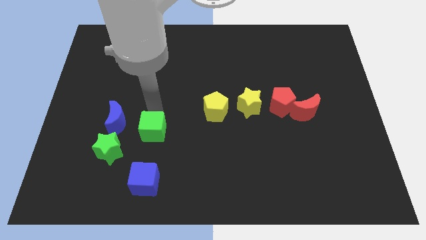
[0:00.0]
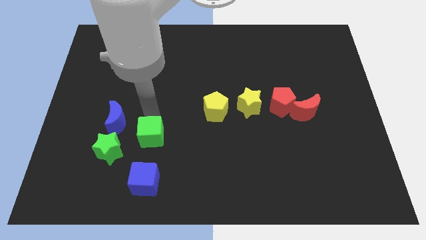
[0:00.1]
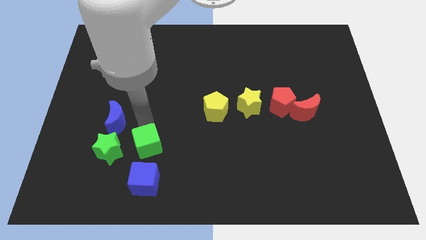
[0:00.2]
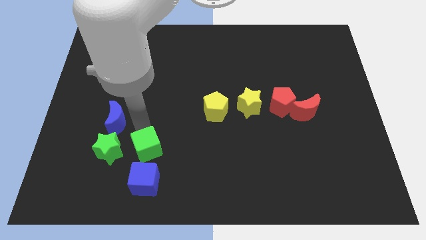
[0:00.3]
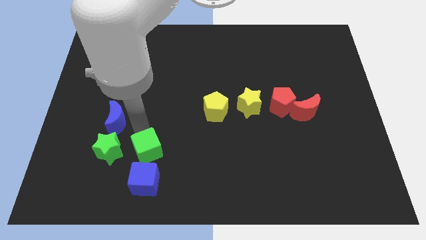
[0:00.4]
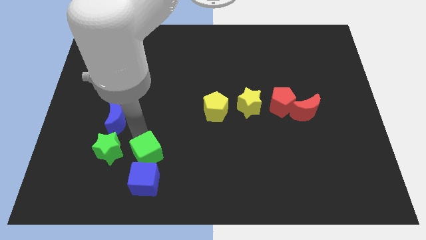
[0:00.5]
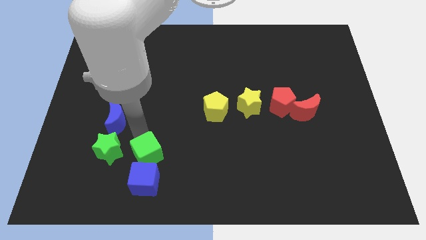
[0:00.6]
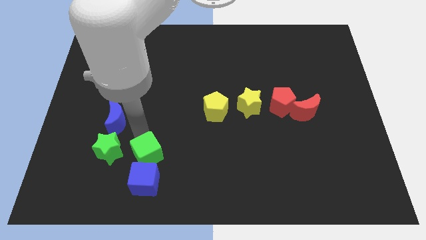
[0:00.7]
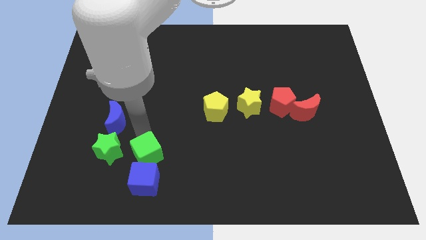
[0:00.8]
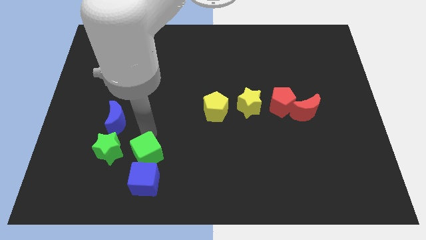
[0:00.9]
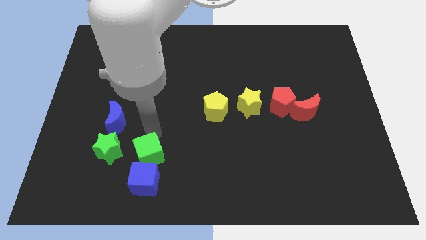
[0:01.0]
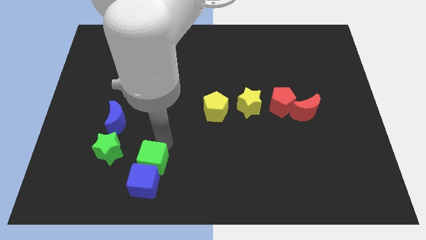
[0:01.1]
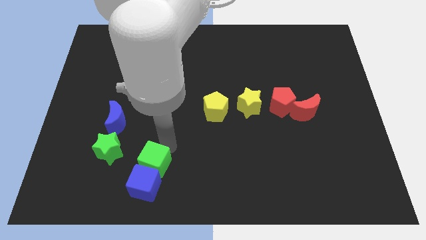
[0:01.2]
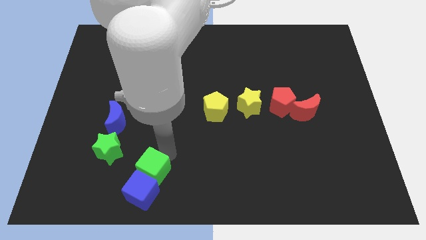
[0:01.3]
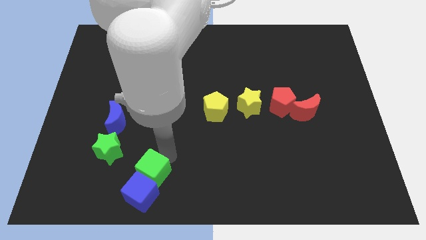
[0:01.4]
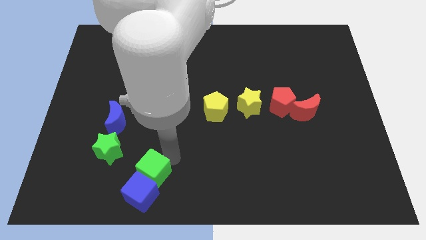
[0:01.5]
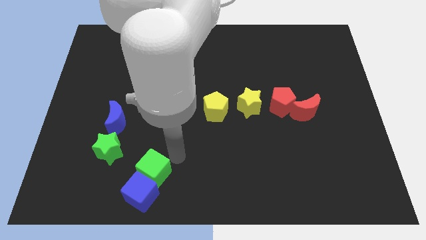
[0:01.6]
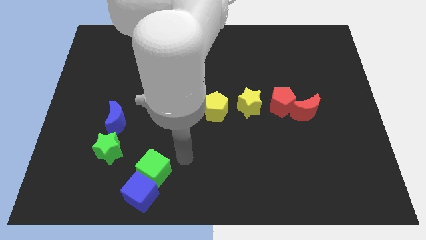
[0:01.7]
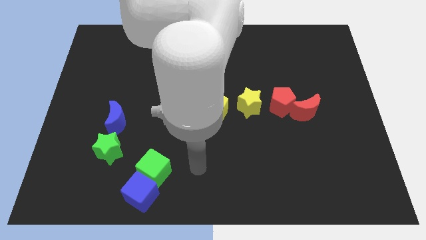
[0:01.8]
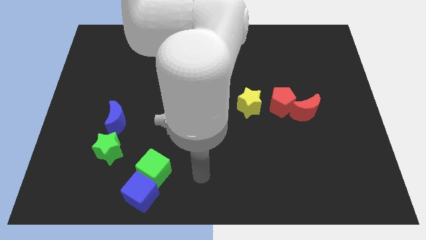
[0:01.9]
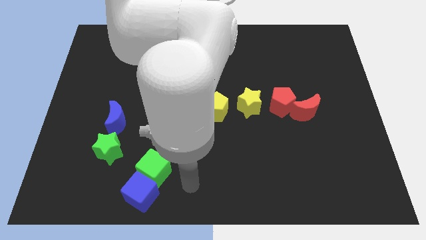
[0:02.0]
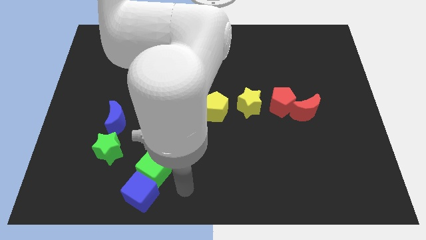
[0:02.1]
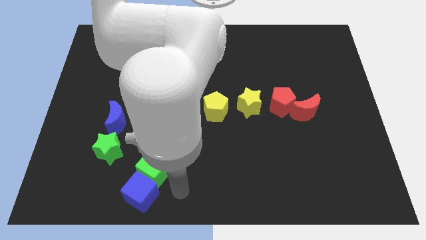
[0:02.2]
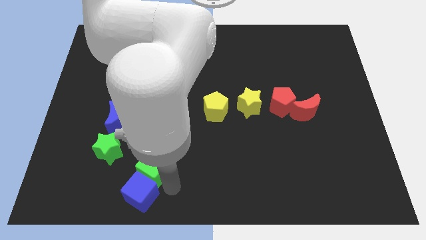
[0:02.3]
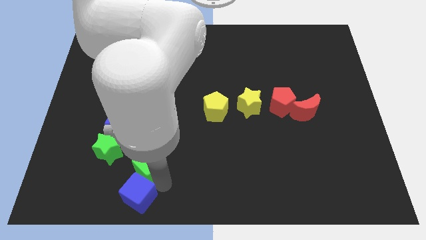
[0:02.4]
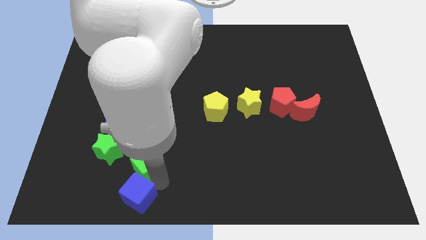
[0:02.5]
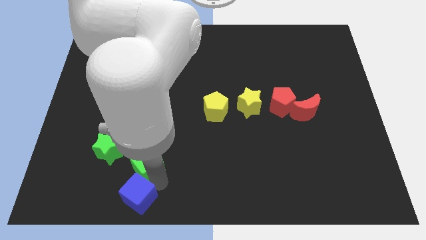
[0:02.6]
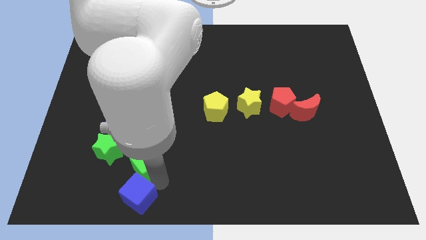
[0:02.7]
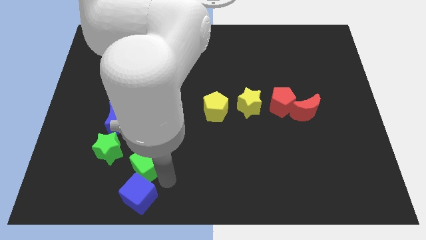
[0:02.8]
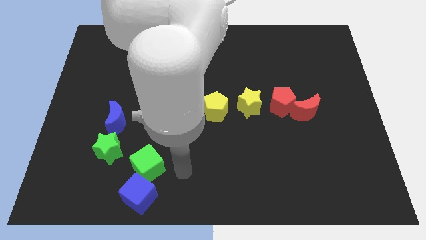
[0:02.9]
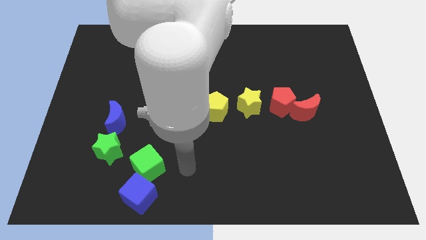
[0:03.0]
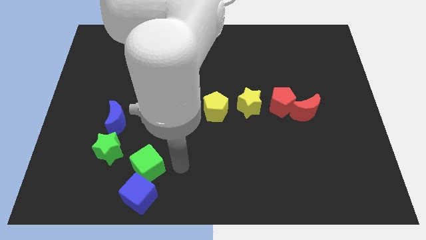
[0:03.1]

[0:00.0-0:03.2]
move the green cube into the blue cube

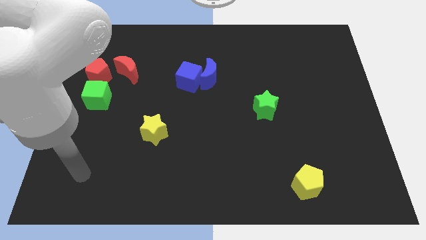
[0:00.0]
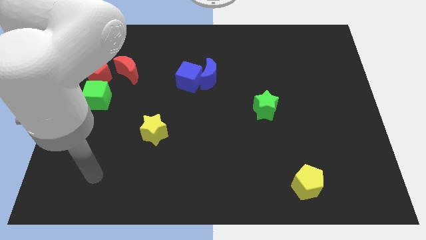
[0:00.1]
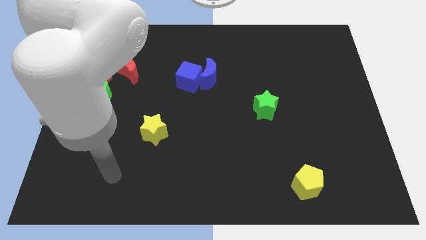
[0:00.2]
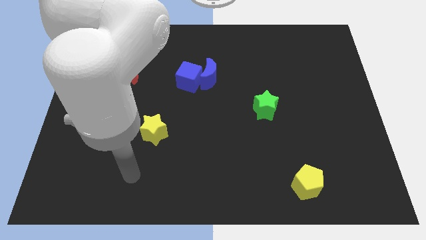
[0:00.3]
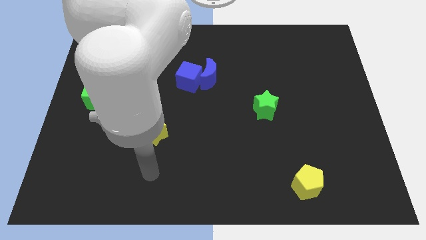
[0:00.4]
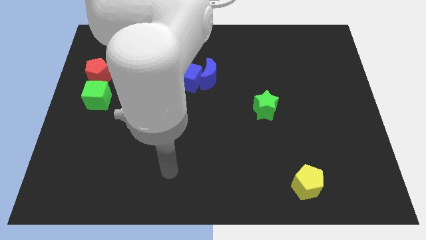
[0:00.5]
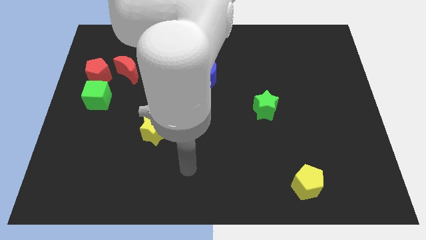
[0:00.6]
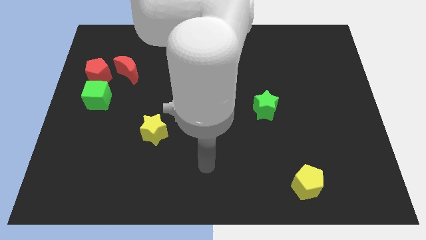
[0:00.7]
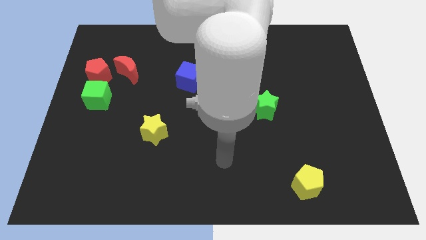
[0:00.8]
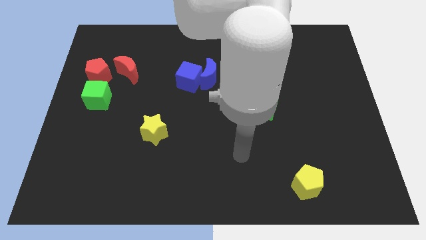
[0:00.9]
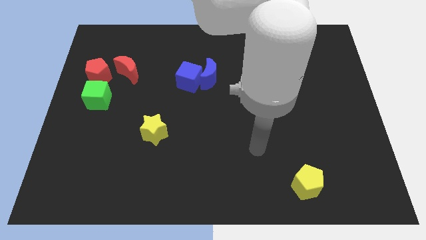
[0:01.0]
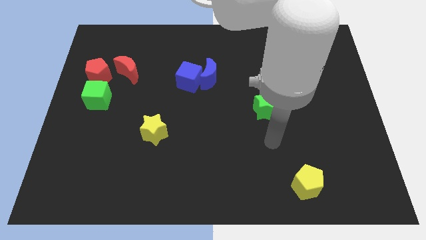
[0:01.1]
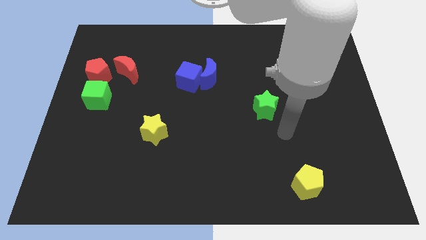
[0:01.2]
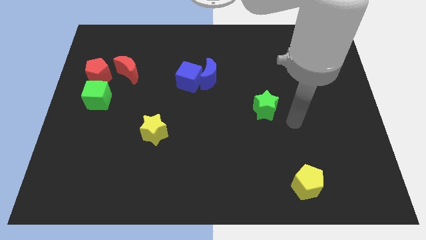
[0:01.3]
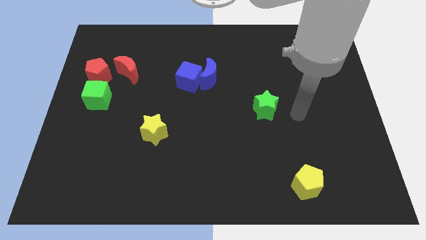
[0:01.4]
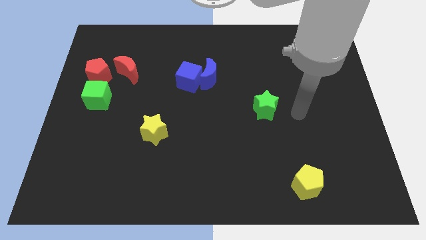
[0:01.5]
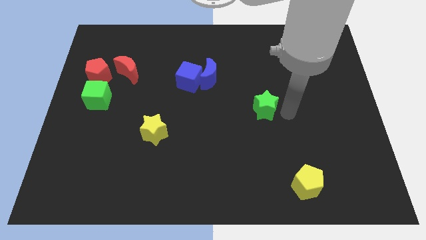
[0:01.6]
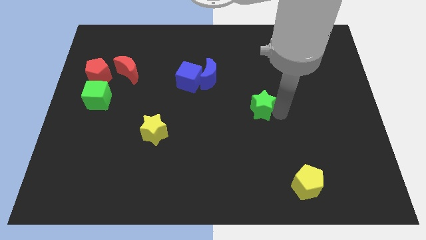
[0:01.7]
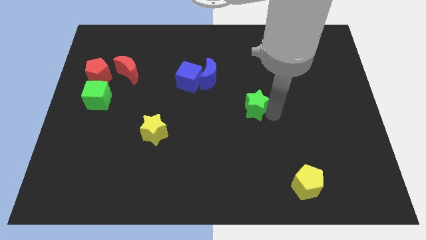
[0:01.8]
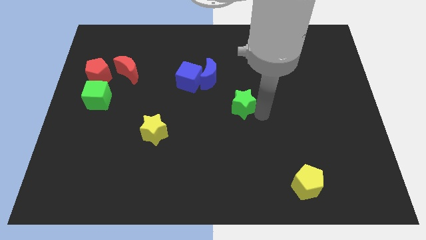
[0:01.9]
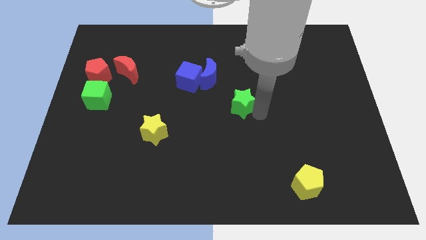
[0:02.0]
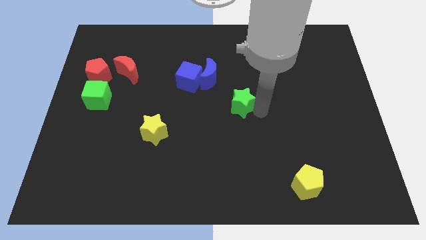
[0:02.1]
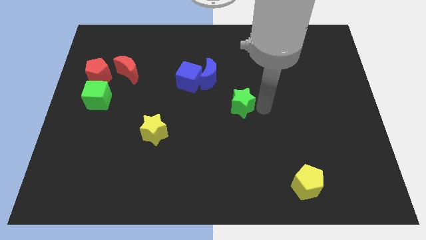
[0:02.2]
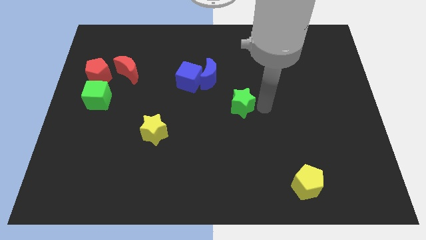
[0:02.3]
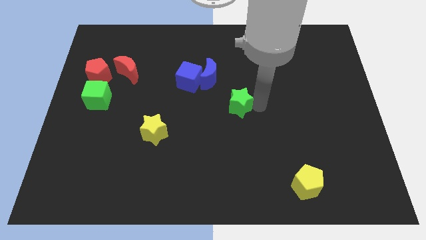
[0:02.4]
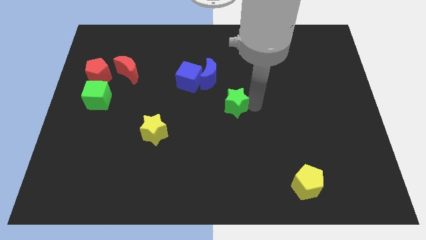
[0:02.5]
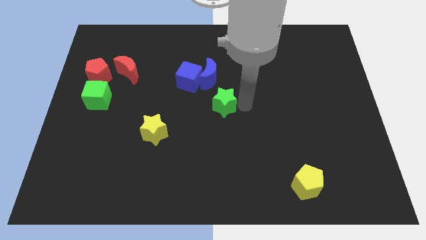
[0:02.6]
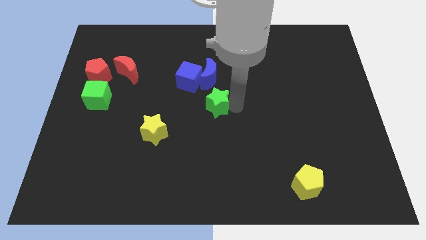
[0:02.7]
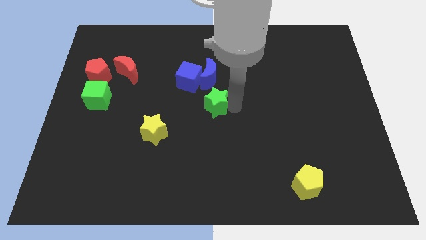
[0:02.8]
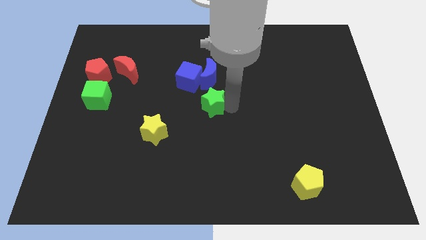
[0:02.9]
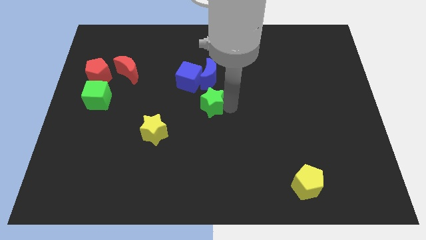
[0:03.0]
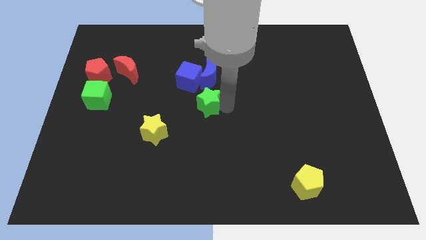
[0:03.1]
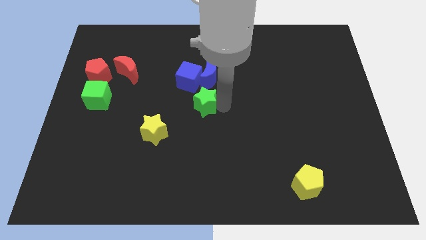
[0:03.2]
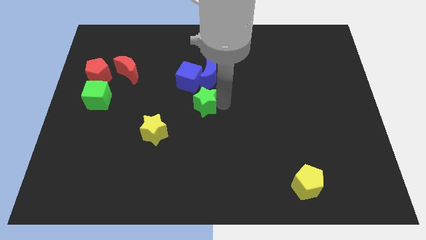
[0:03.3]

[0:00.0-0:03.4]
slide the green star to the center of the board

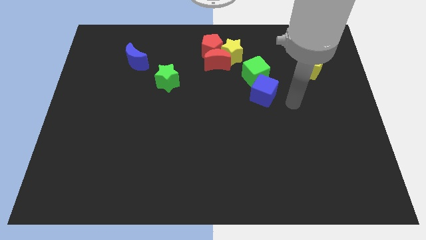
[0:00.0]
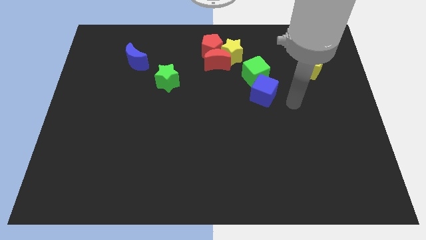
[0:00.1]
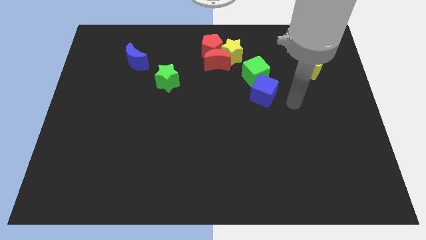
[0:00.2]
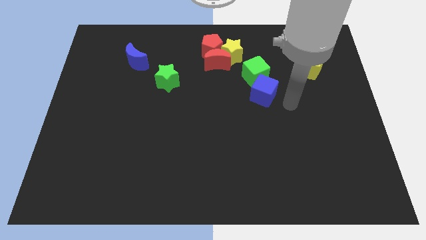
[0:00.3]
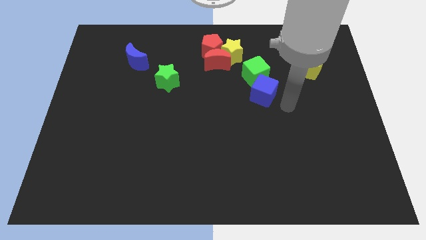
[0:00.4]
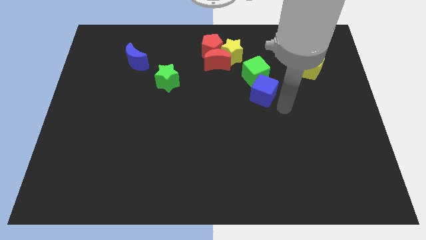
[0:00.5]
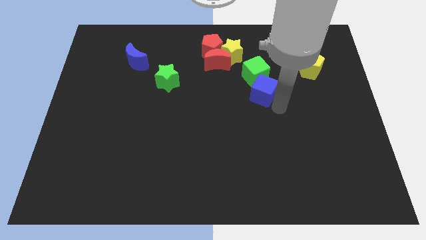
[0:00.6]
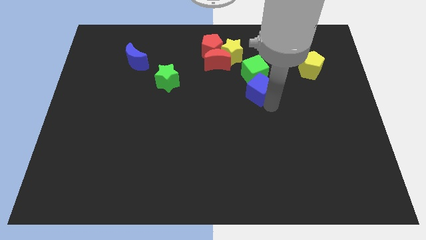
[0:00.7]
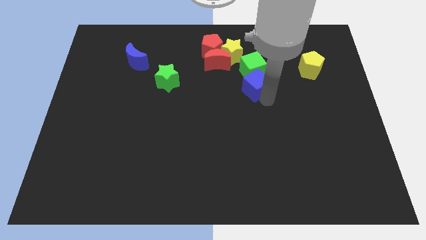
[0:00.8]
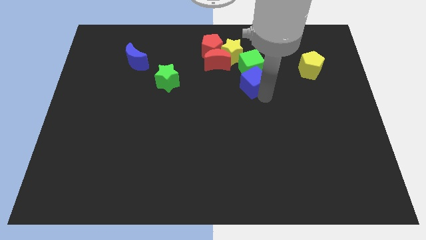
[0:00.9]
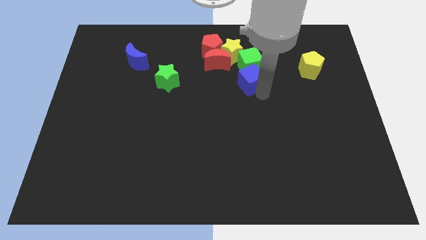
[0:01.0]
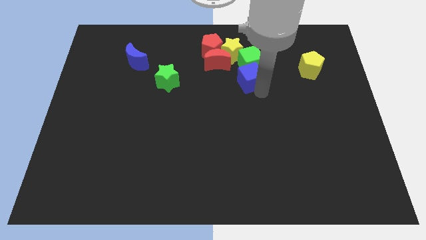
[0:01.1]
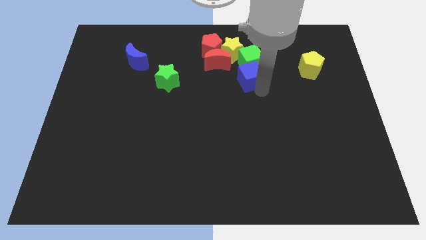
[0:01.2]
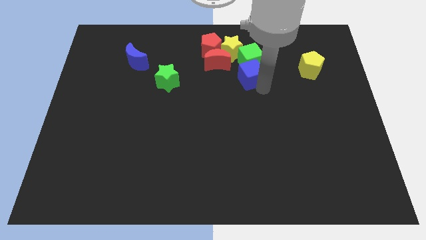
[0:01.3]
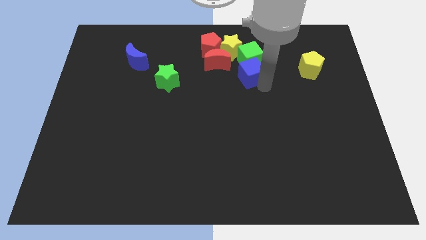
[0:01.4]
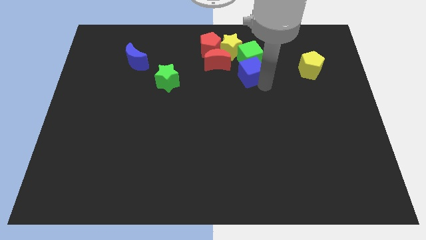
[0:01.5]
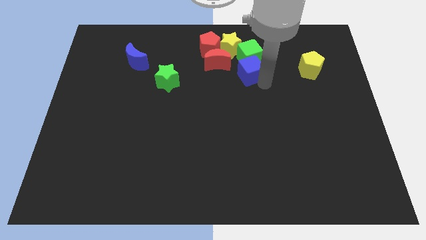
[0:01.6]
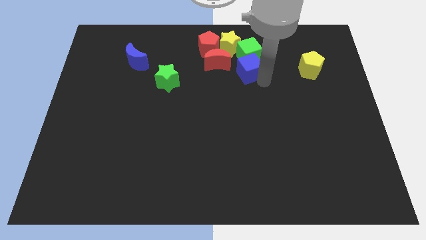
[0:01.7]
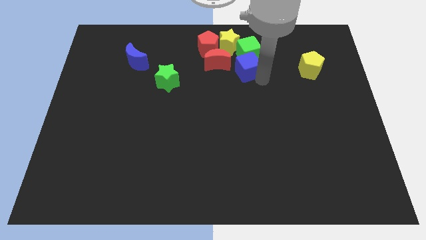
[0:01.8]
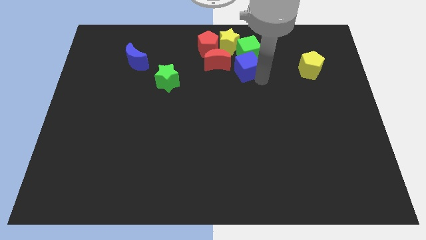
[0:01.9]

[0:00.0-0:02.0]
push the green cube with blue cube towards the top right of the board

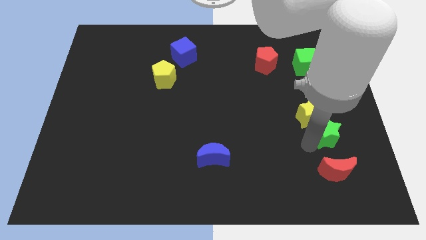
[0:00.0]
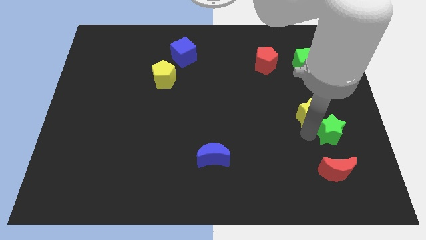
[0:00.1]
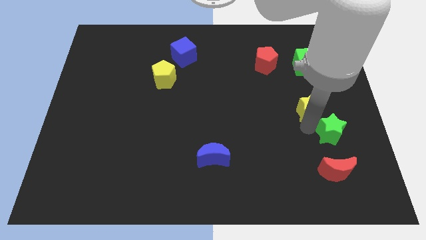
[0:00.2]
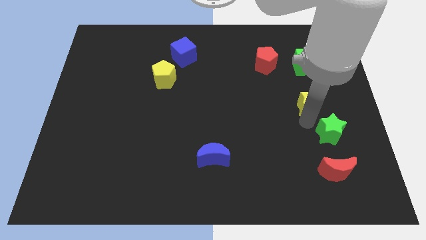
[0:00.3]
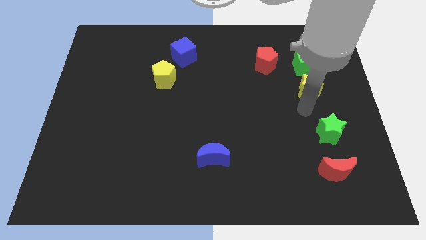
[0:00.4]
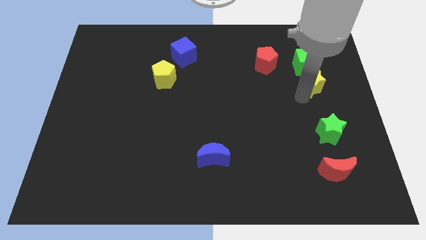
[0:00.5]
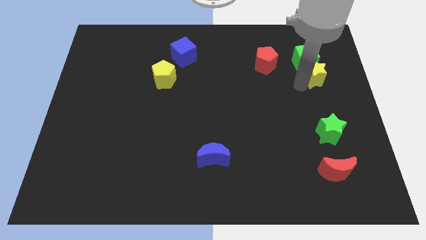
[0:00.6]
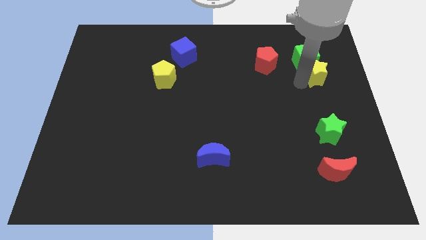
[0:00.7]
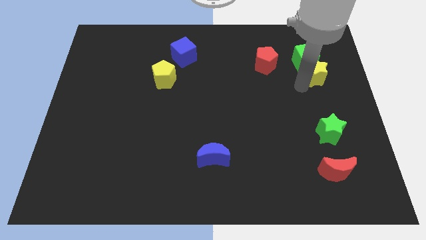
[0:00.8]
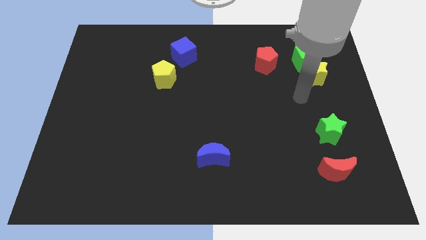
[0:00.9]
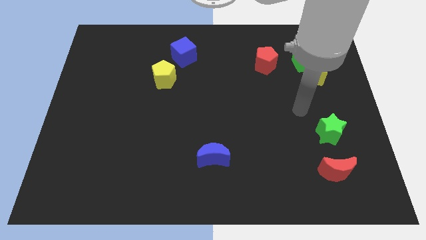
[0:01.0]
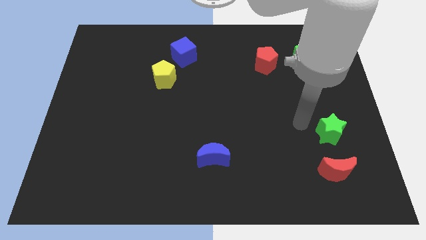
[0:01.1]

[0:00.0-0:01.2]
move the yellow star below the green cube
